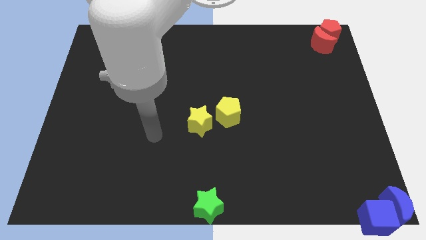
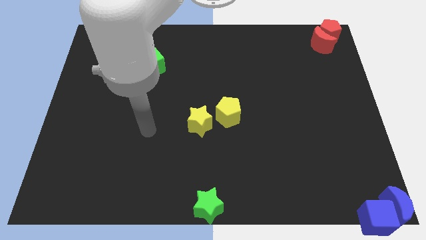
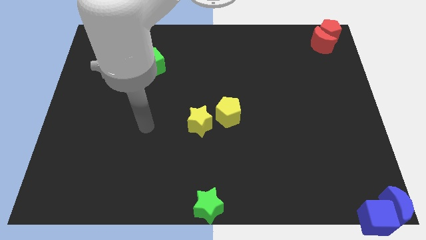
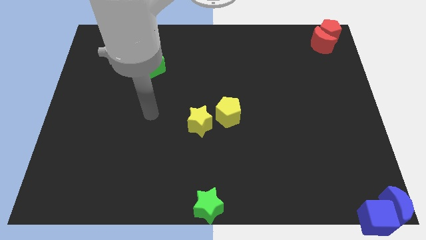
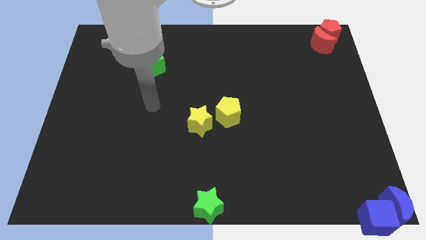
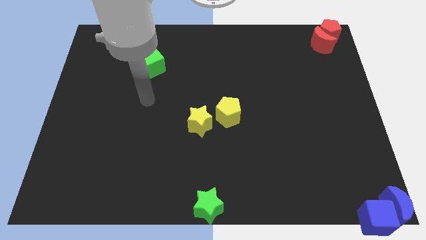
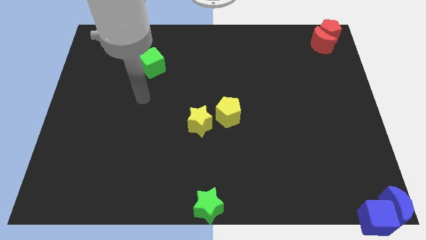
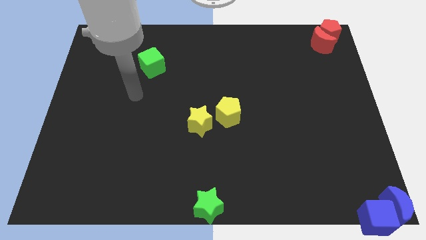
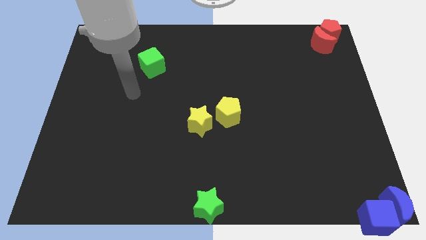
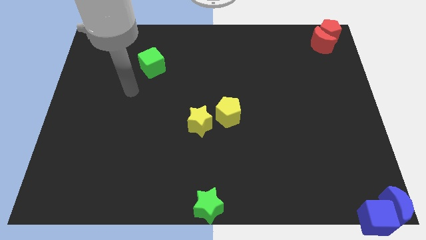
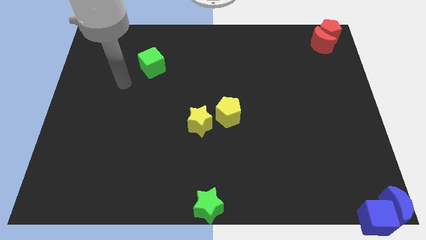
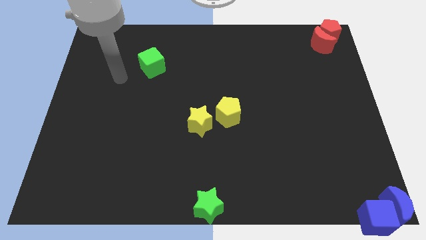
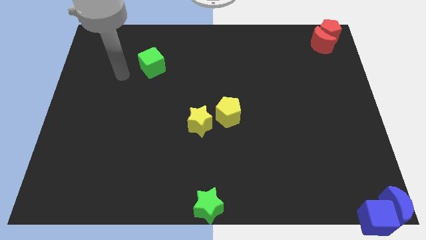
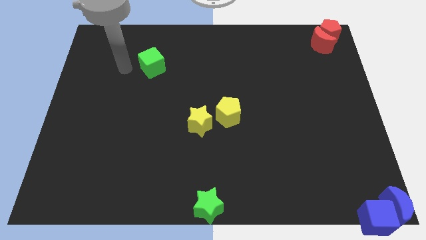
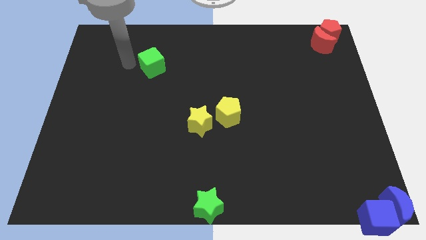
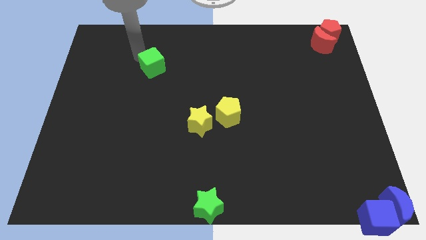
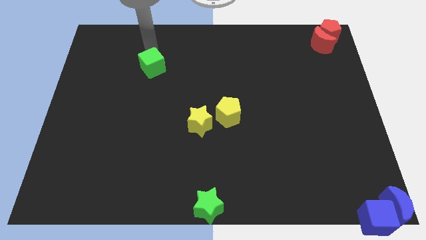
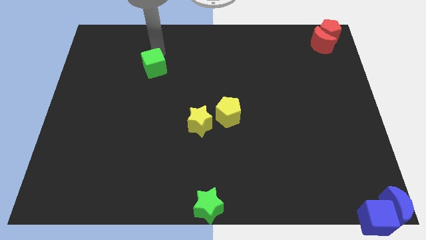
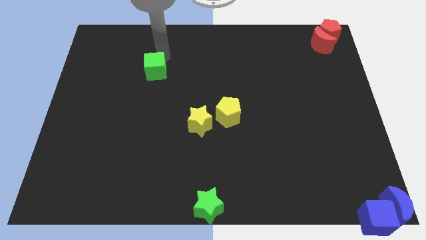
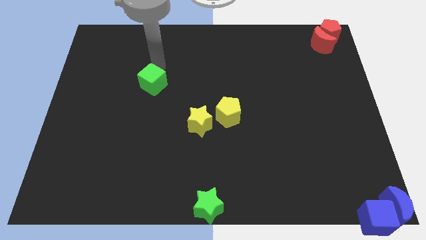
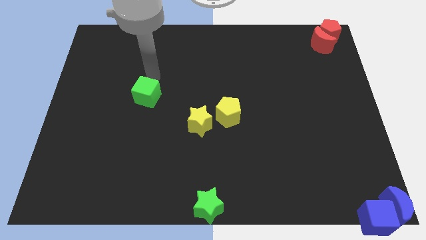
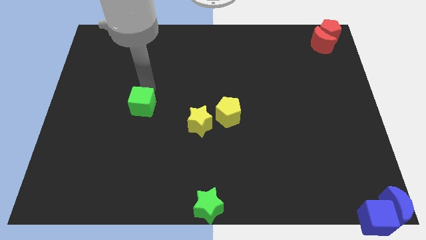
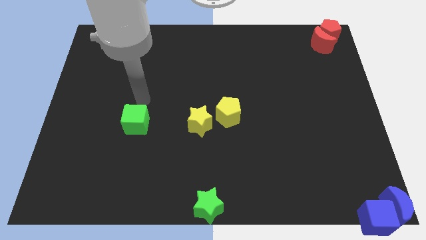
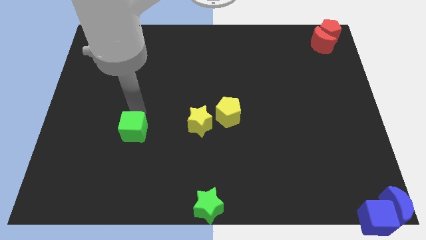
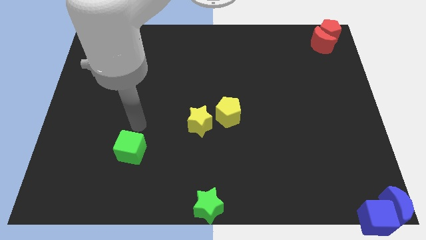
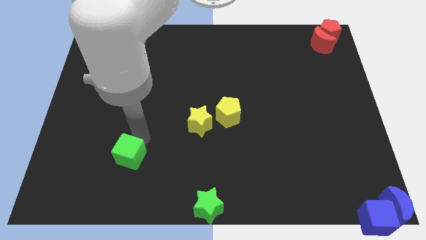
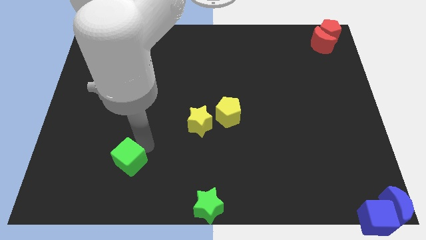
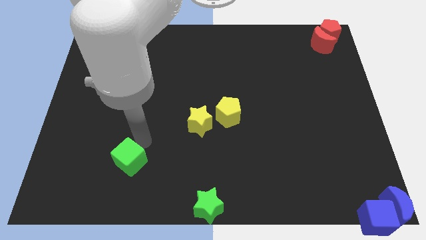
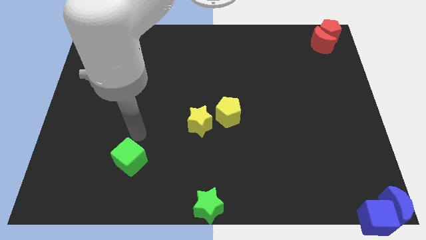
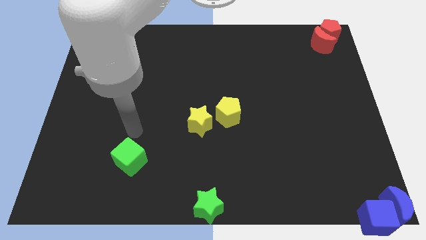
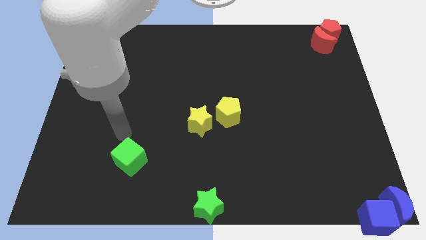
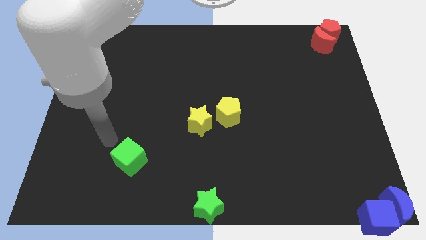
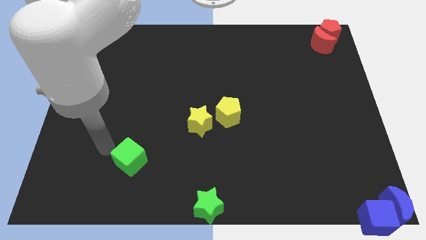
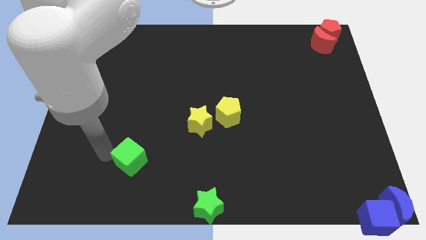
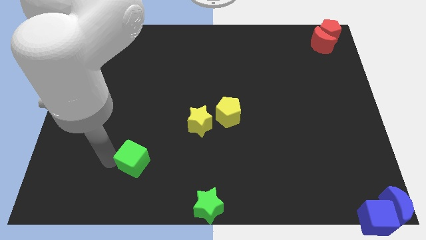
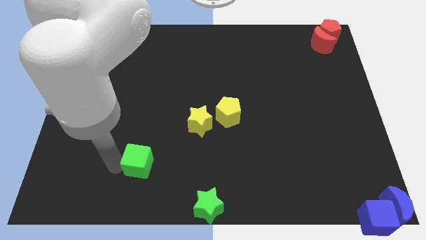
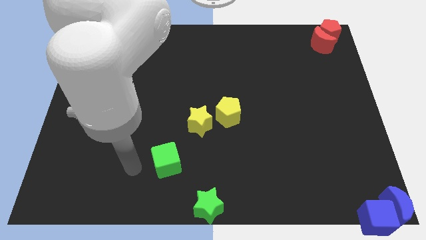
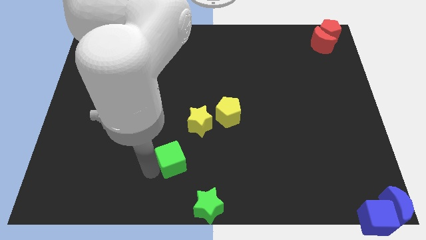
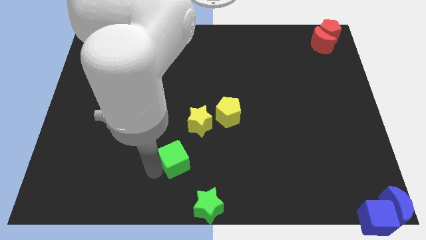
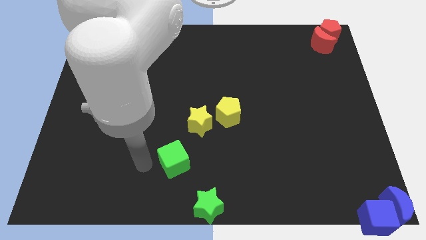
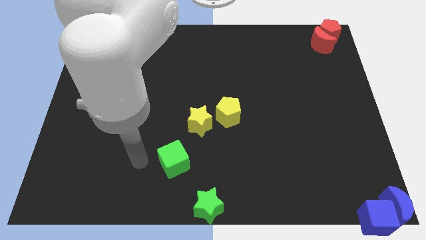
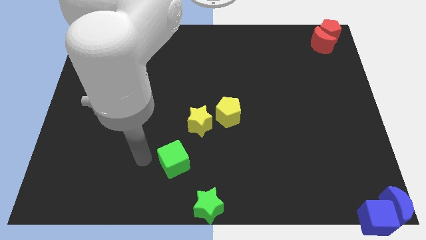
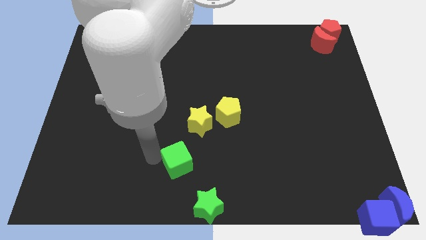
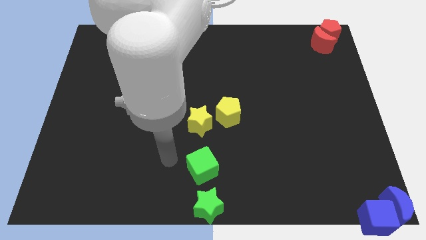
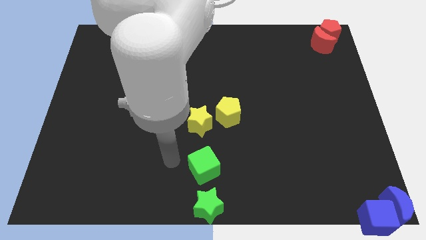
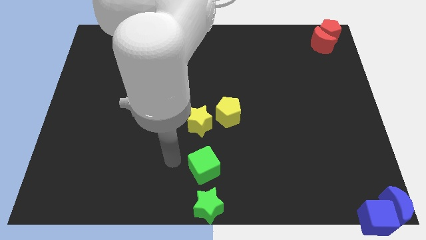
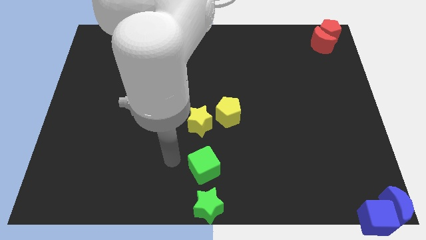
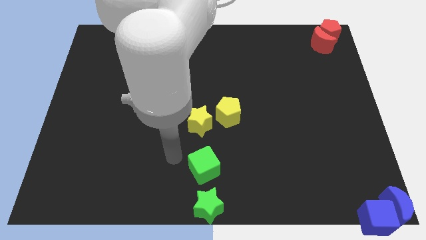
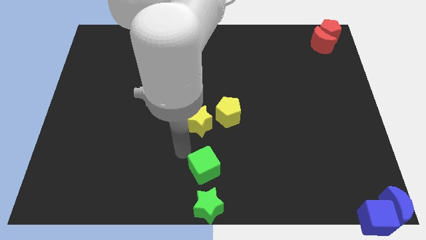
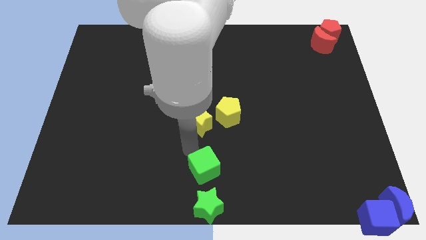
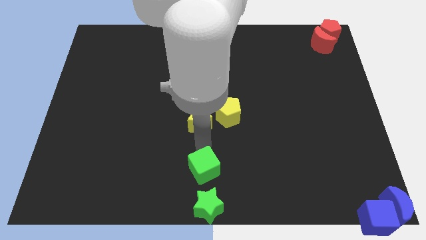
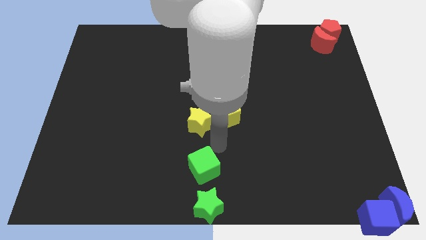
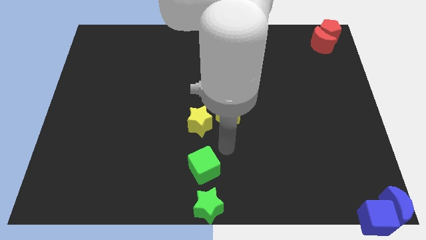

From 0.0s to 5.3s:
place the green cube in between the yellow star and green star

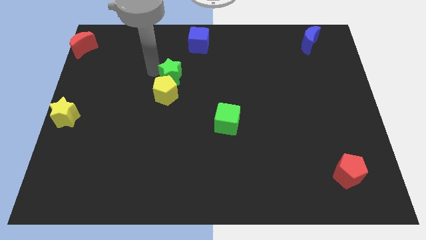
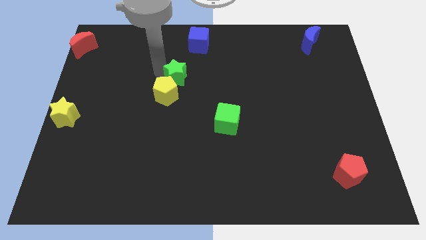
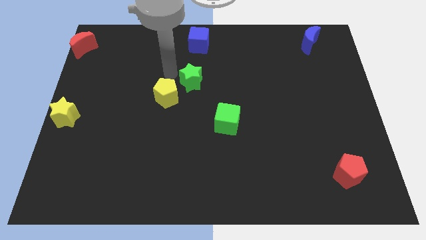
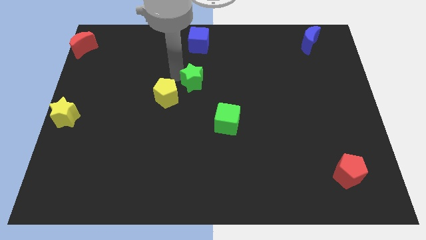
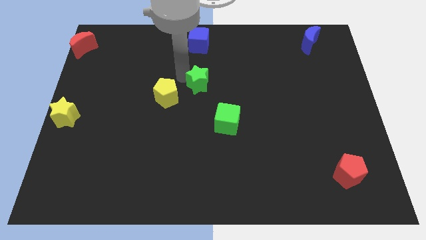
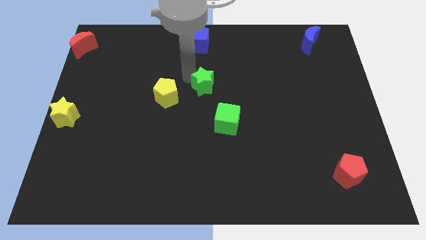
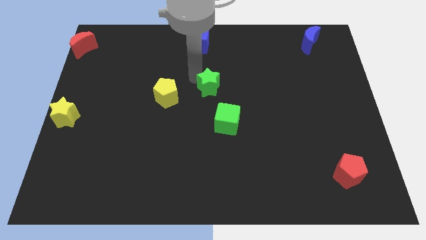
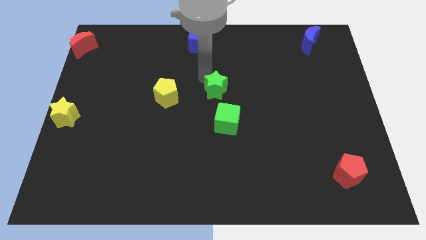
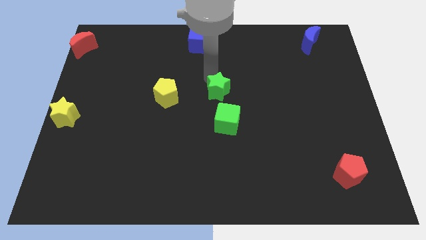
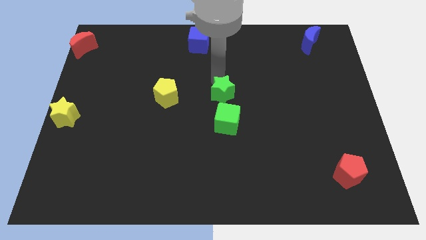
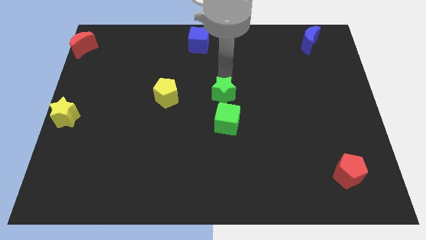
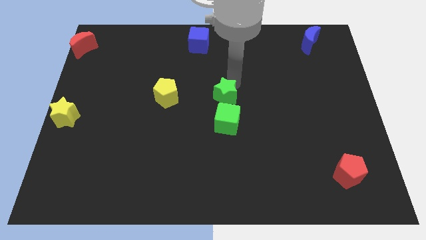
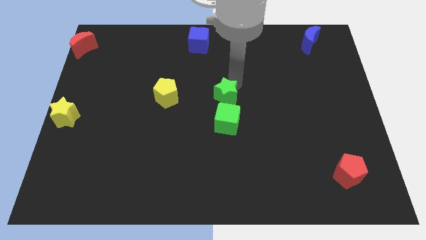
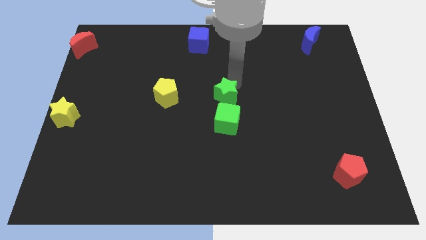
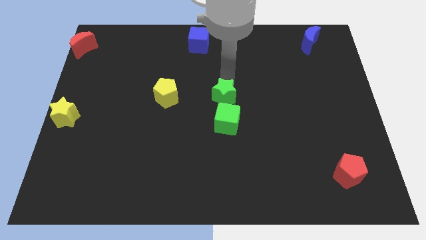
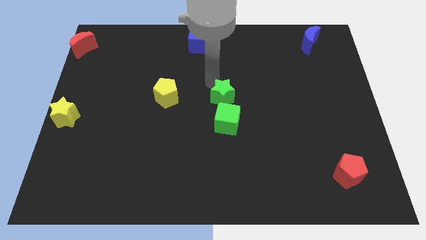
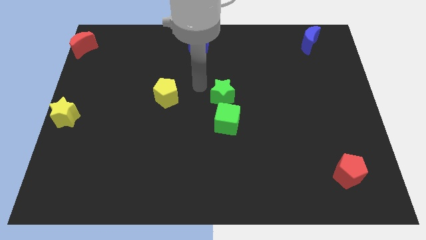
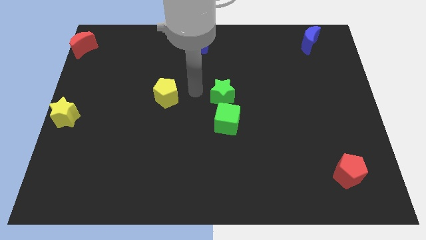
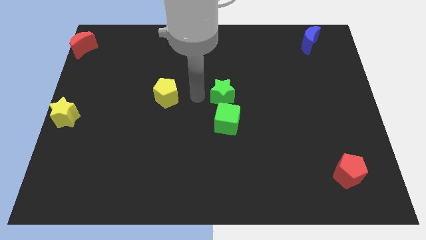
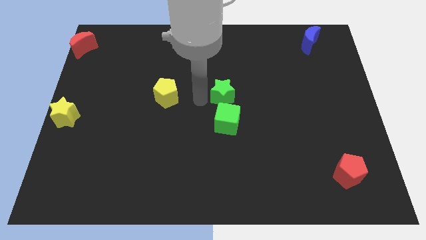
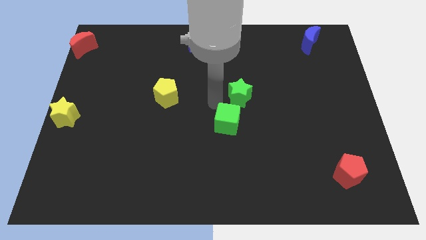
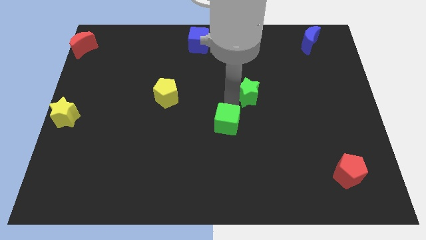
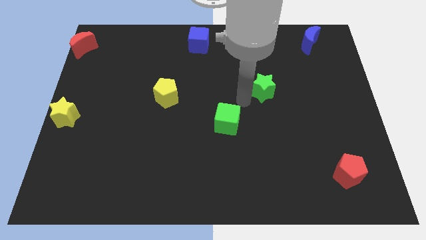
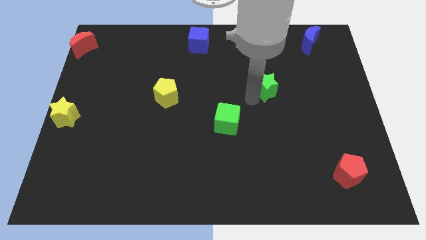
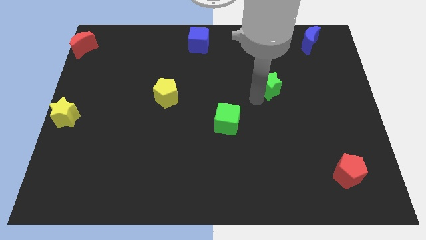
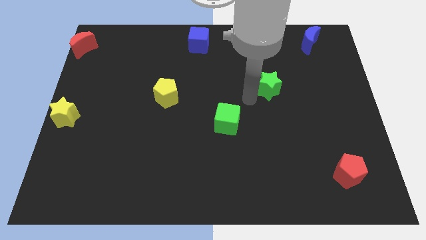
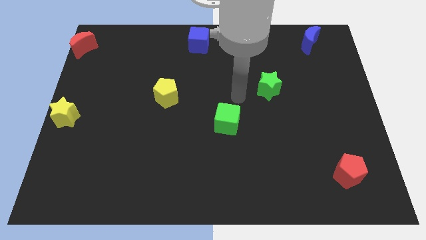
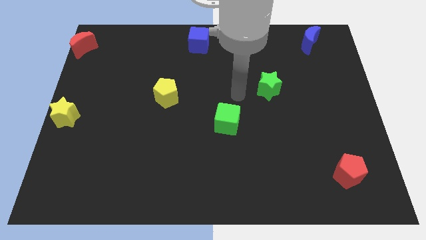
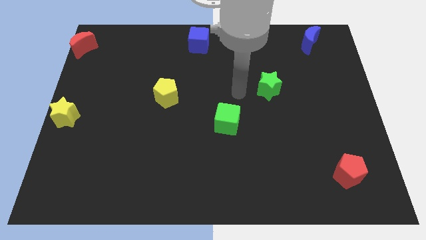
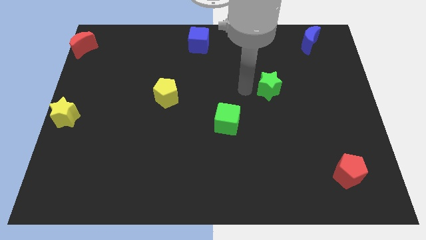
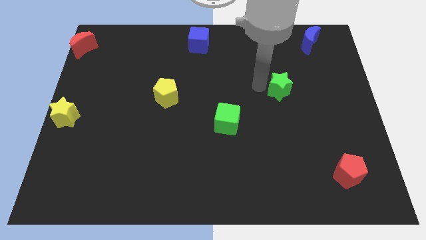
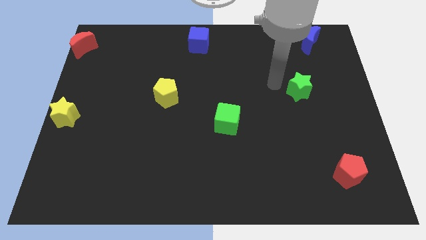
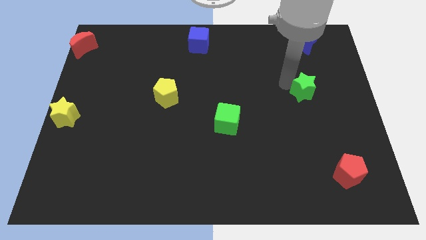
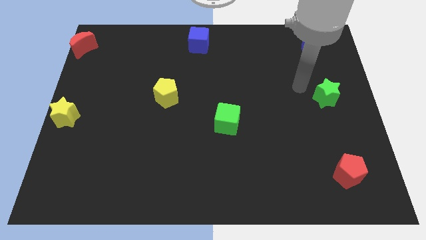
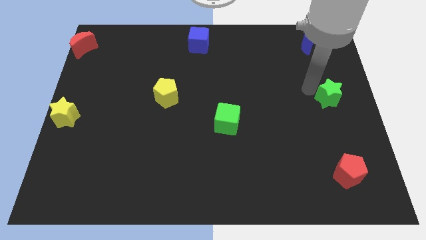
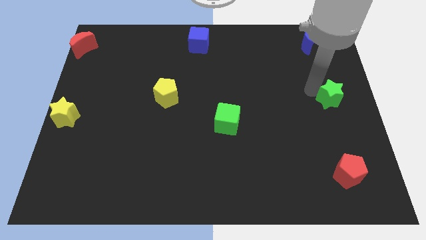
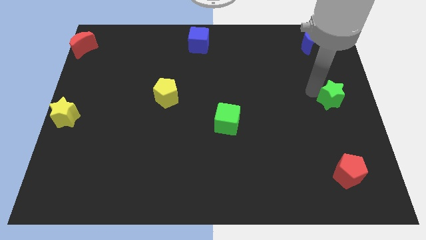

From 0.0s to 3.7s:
push the green star towards the center right of the board
